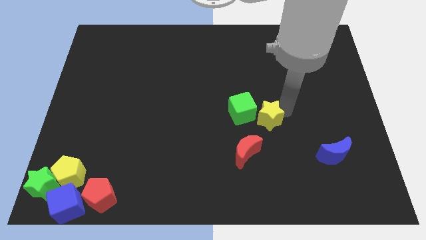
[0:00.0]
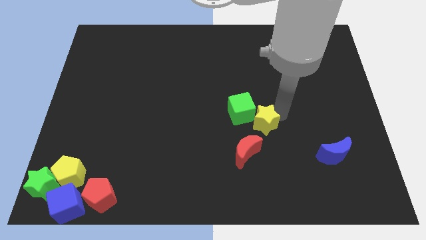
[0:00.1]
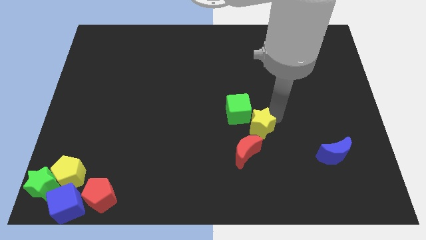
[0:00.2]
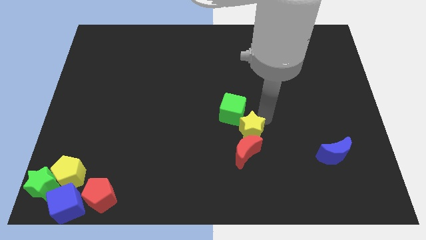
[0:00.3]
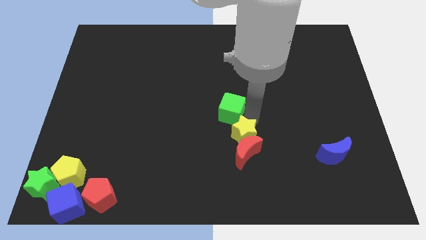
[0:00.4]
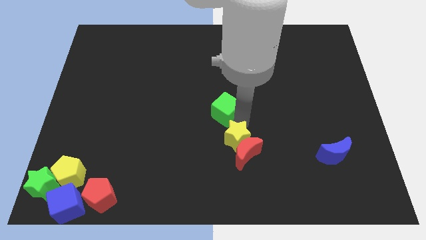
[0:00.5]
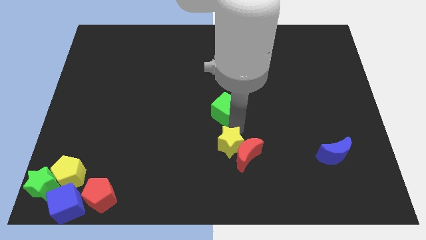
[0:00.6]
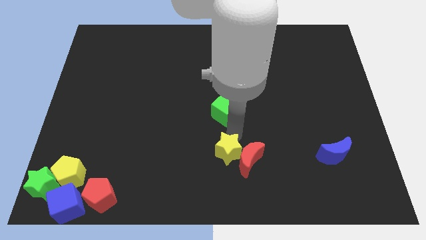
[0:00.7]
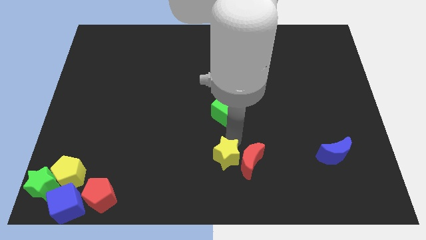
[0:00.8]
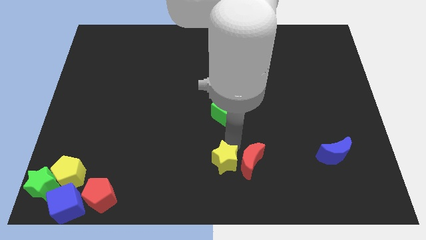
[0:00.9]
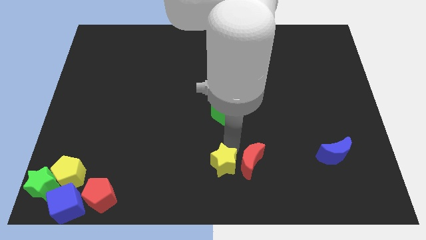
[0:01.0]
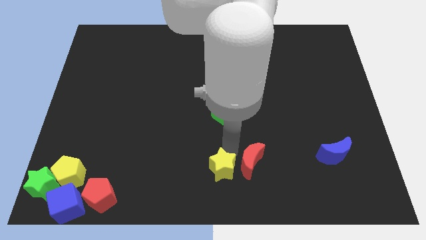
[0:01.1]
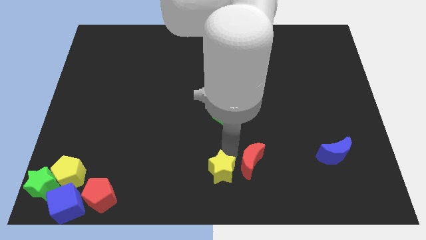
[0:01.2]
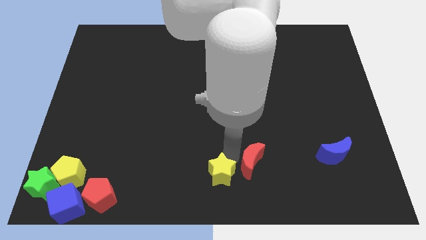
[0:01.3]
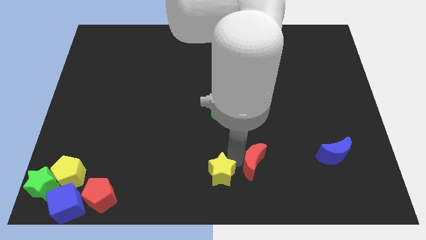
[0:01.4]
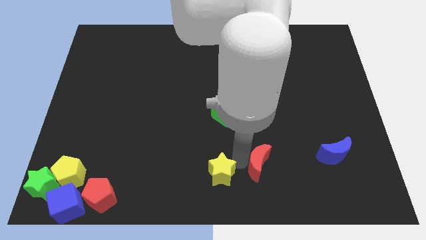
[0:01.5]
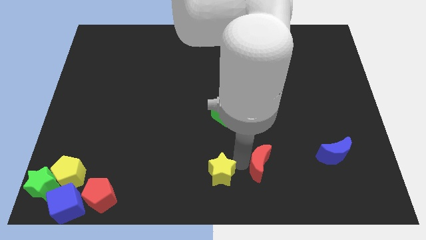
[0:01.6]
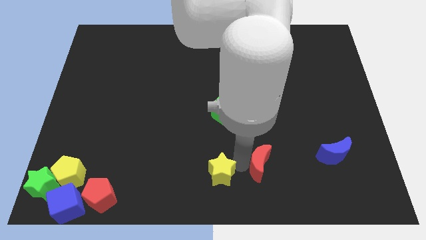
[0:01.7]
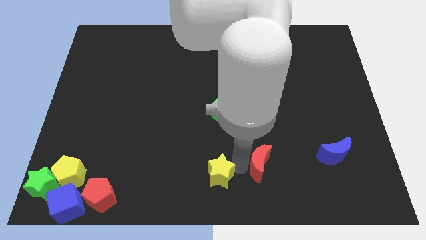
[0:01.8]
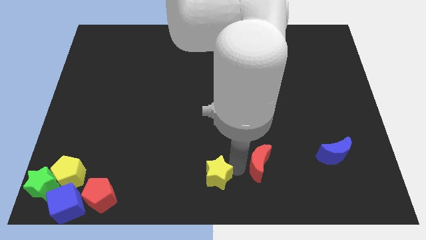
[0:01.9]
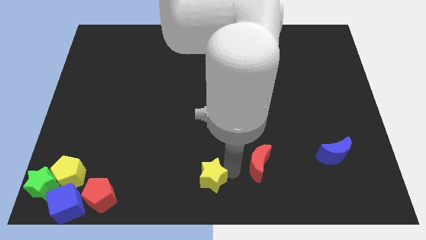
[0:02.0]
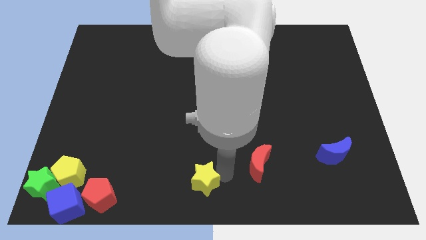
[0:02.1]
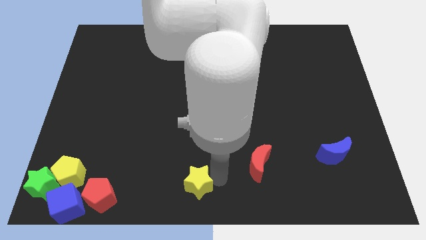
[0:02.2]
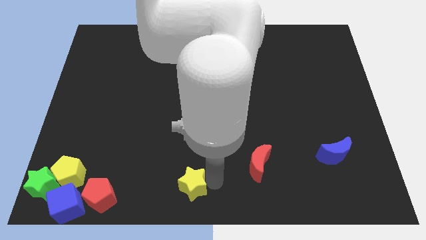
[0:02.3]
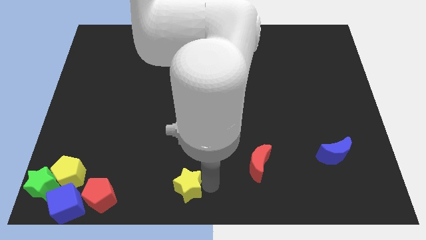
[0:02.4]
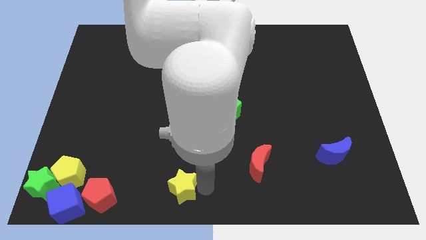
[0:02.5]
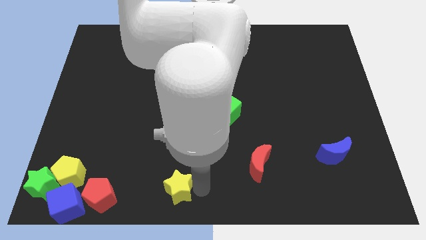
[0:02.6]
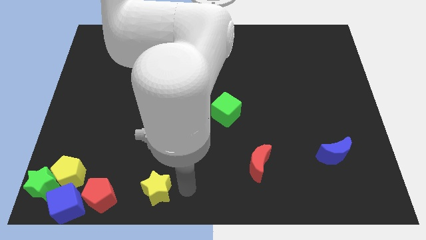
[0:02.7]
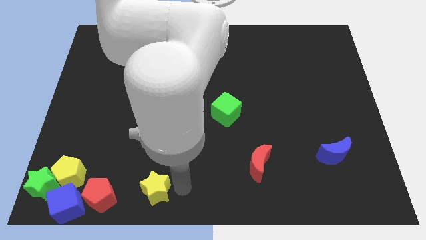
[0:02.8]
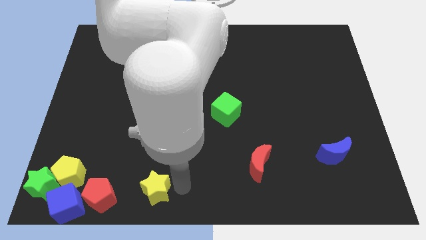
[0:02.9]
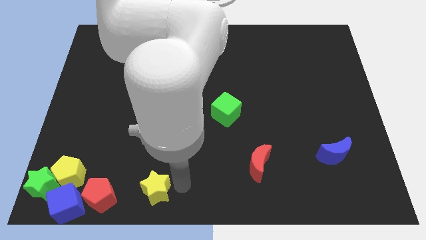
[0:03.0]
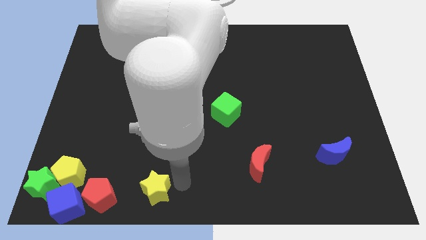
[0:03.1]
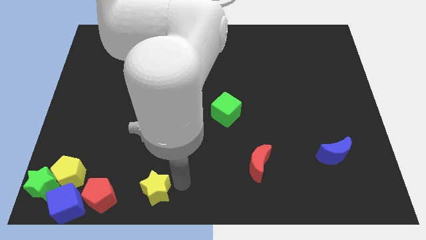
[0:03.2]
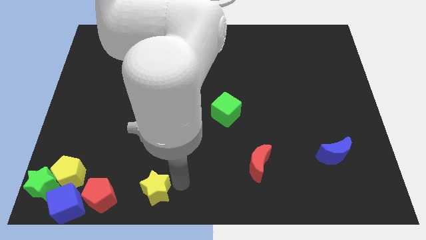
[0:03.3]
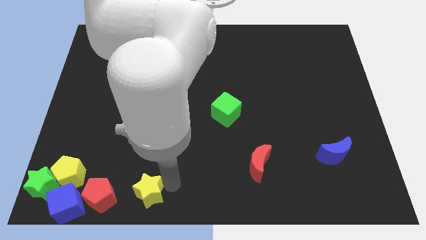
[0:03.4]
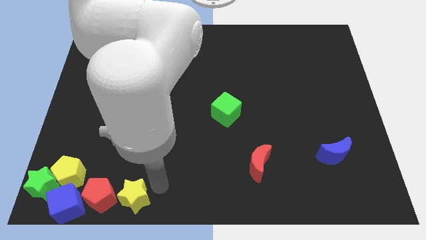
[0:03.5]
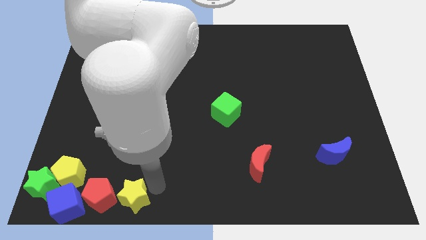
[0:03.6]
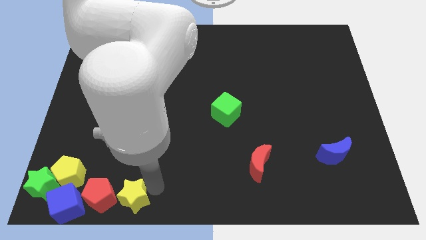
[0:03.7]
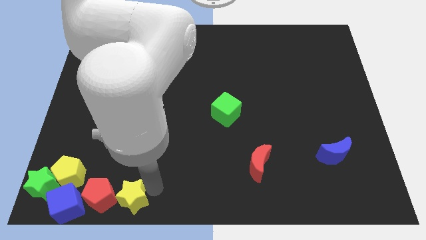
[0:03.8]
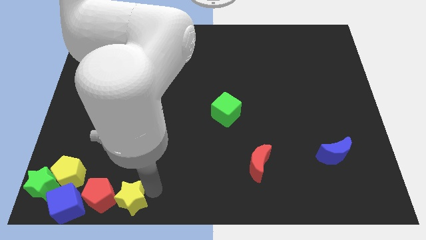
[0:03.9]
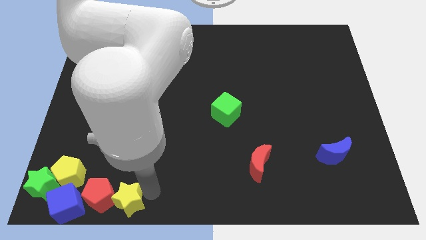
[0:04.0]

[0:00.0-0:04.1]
add yellow star into red pentagon

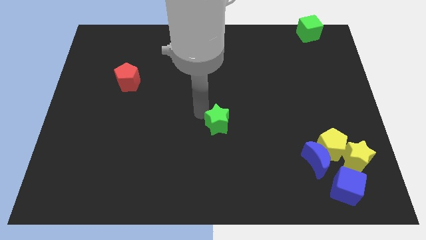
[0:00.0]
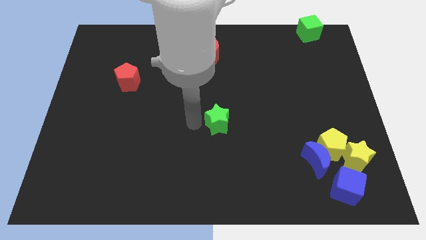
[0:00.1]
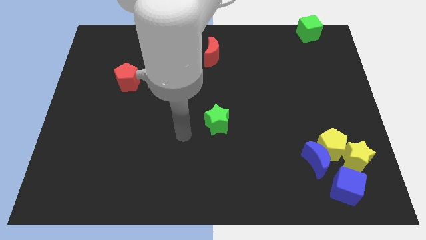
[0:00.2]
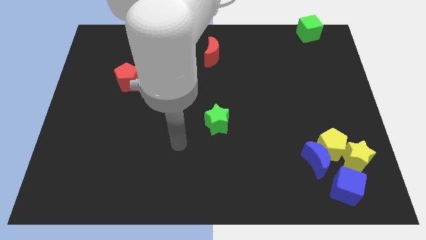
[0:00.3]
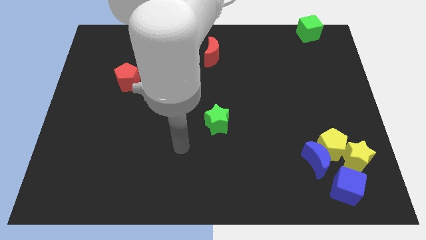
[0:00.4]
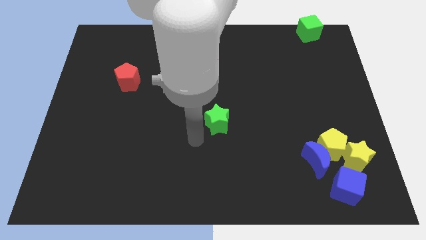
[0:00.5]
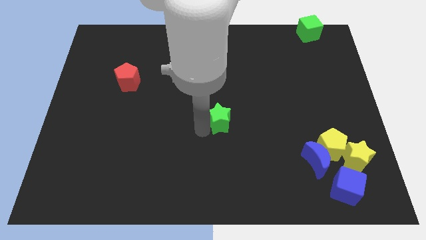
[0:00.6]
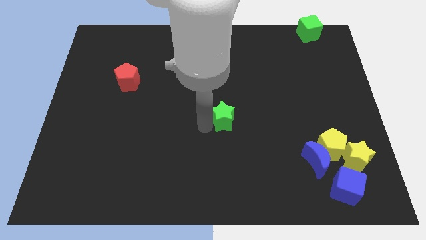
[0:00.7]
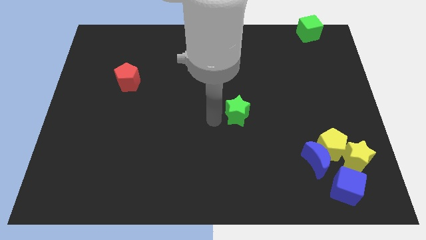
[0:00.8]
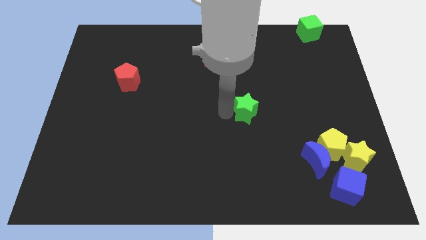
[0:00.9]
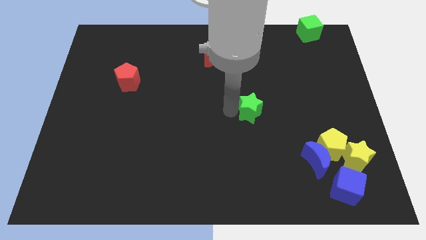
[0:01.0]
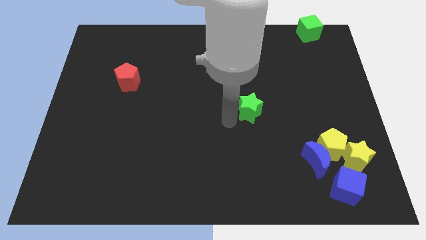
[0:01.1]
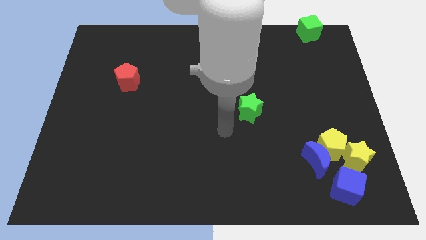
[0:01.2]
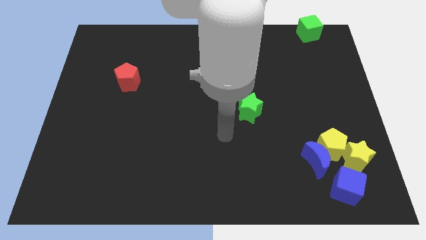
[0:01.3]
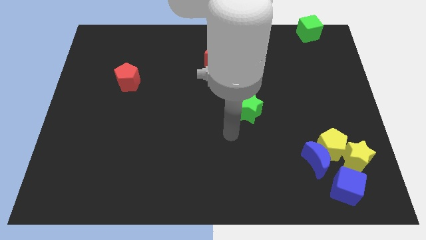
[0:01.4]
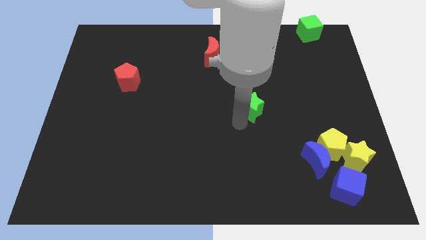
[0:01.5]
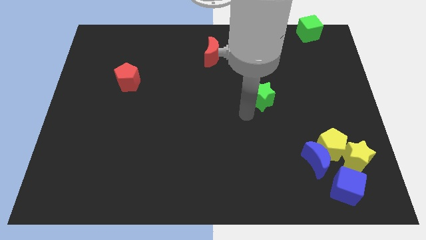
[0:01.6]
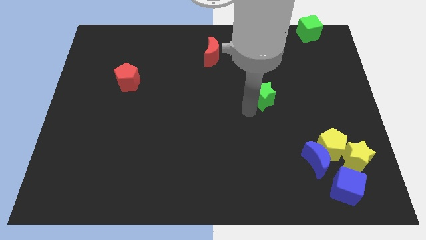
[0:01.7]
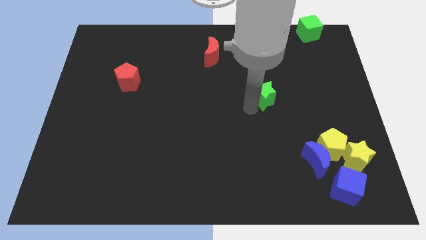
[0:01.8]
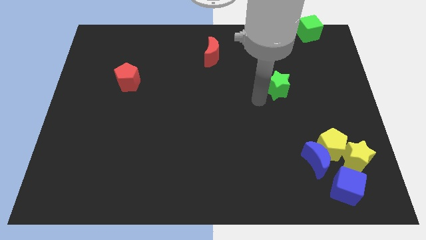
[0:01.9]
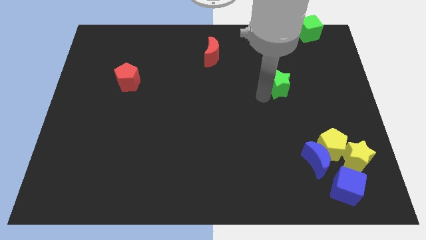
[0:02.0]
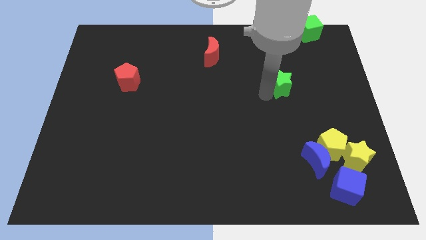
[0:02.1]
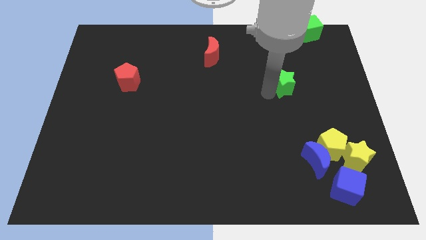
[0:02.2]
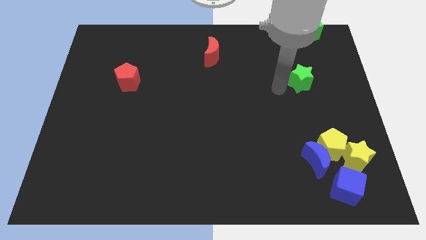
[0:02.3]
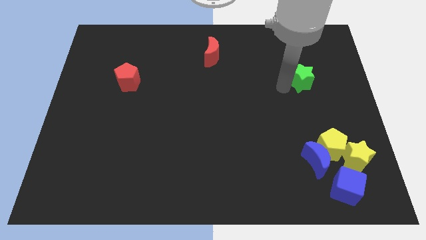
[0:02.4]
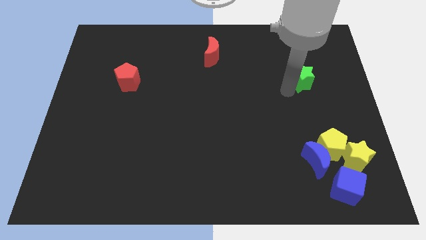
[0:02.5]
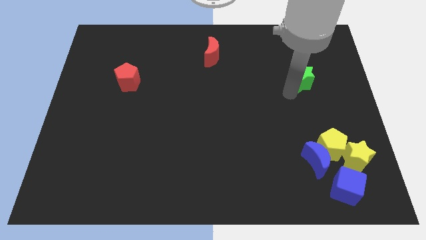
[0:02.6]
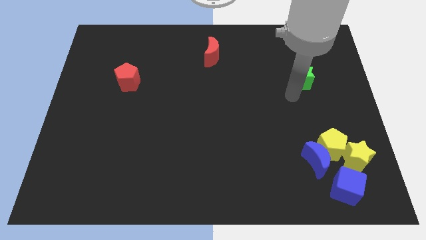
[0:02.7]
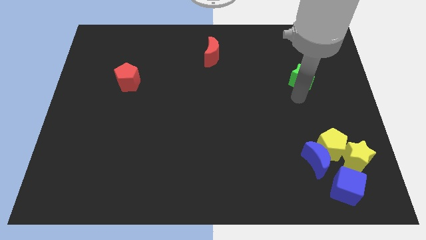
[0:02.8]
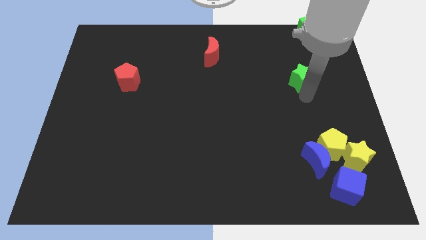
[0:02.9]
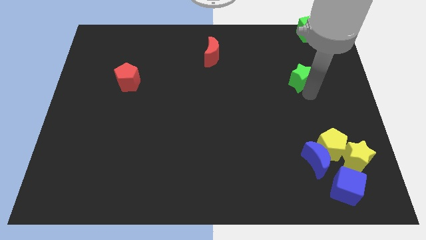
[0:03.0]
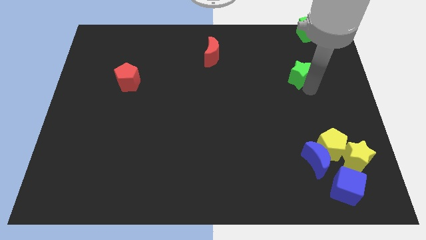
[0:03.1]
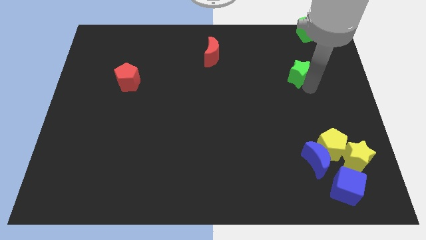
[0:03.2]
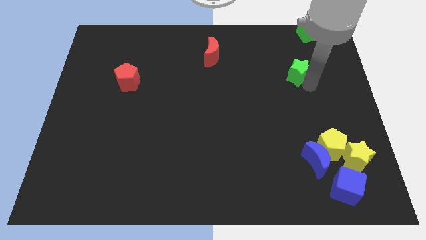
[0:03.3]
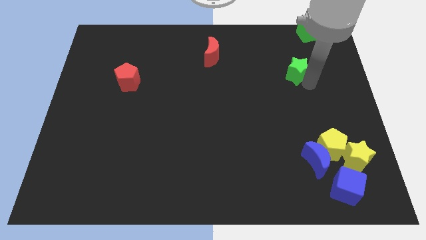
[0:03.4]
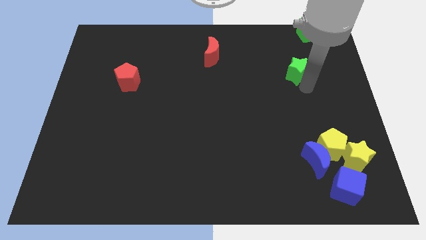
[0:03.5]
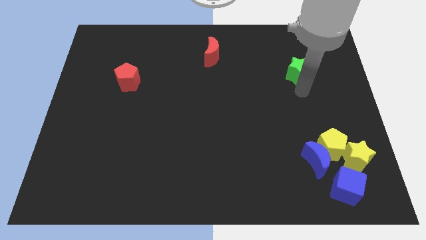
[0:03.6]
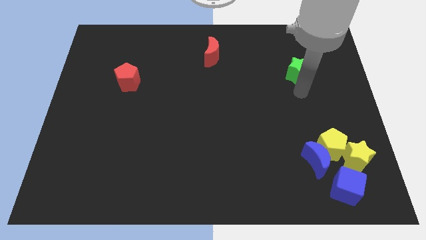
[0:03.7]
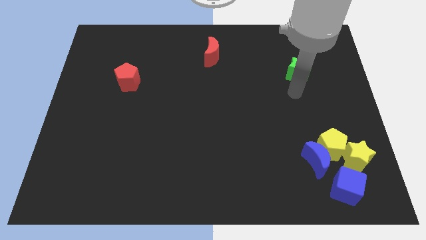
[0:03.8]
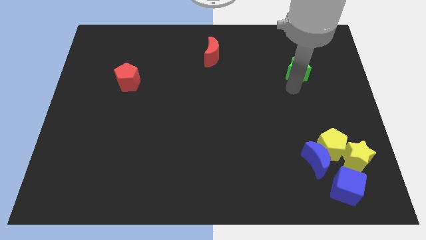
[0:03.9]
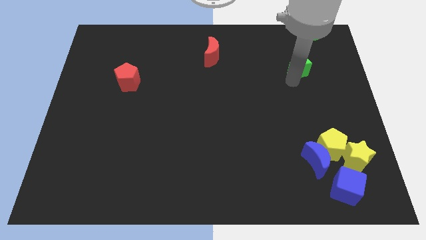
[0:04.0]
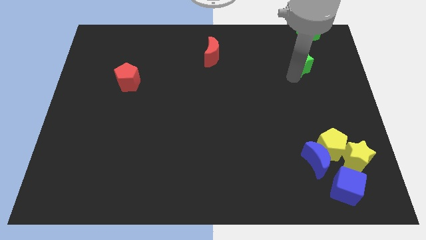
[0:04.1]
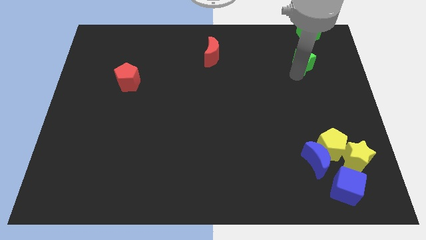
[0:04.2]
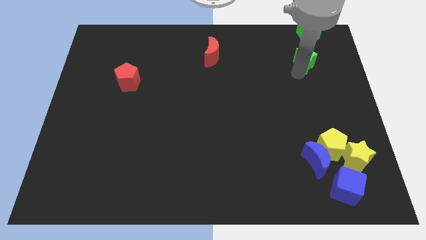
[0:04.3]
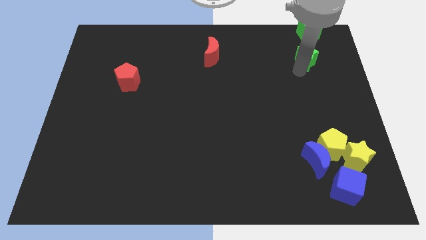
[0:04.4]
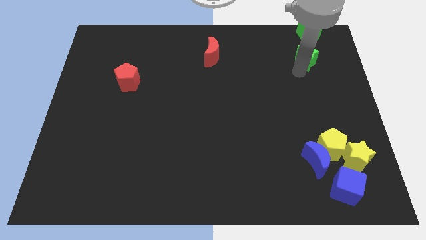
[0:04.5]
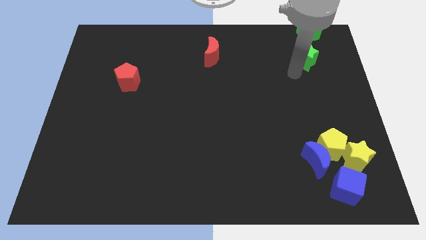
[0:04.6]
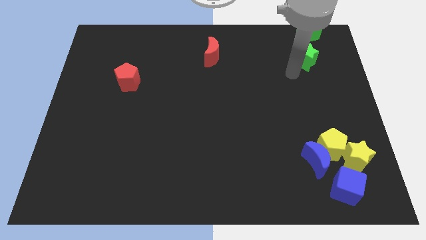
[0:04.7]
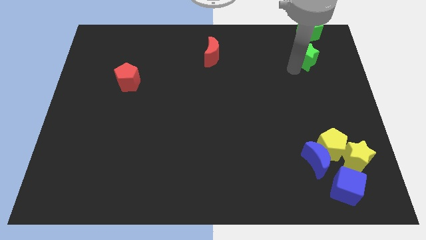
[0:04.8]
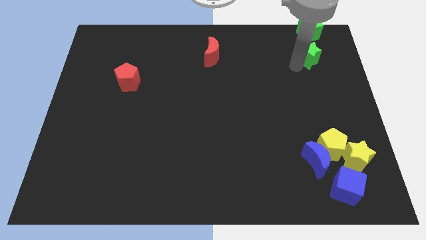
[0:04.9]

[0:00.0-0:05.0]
place the green star below the green cube
